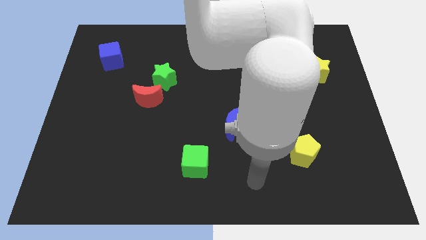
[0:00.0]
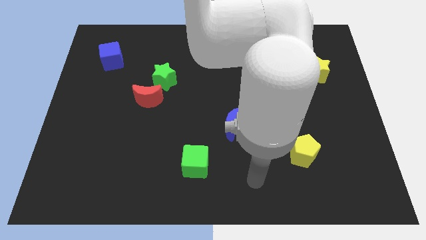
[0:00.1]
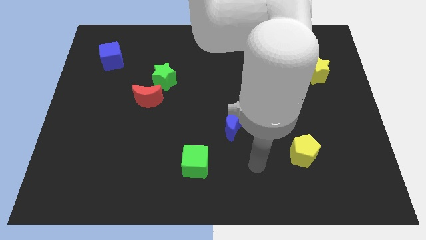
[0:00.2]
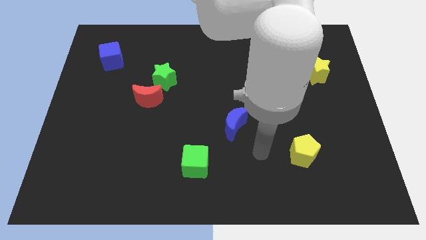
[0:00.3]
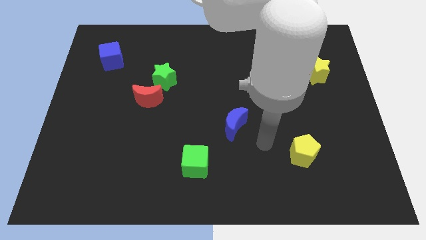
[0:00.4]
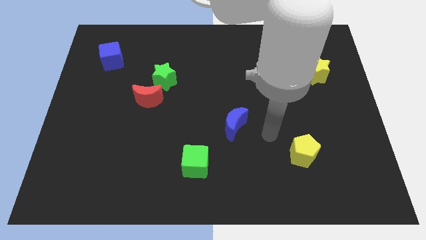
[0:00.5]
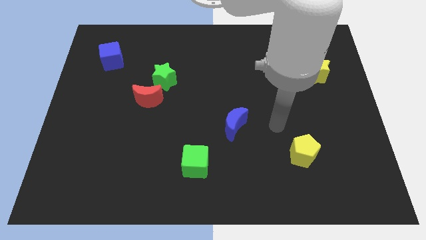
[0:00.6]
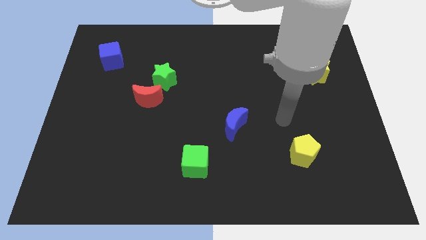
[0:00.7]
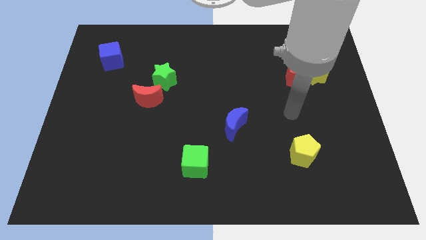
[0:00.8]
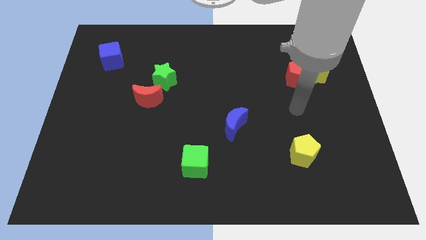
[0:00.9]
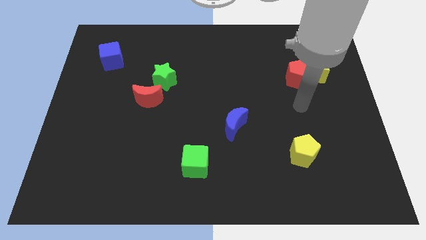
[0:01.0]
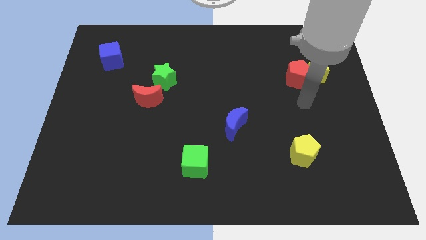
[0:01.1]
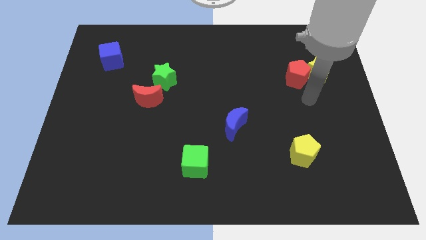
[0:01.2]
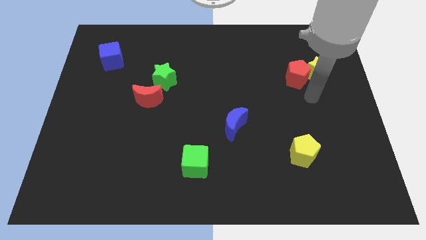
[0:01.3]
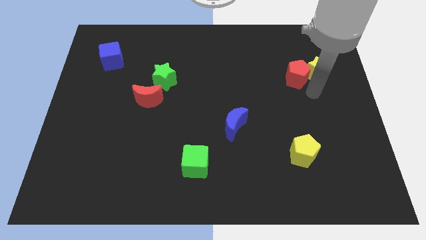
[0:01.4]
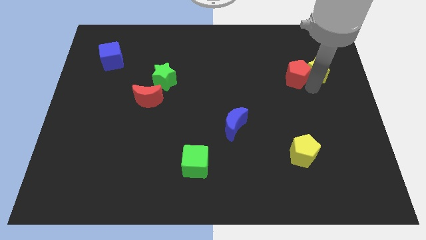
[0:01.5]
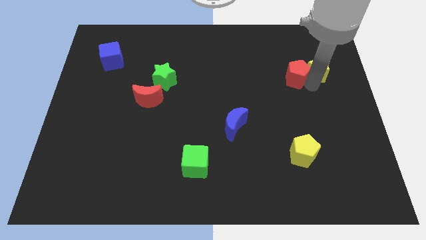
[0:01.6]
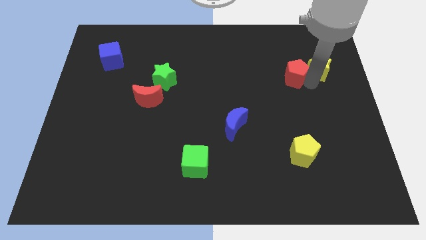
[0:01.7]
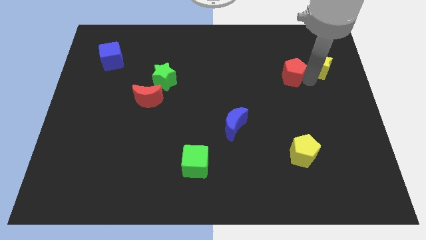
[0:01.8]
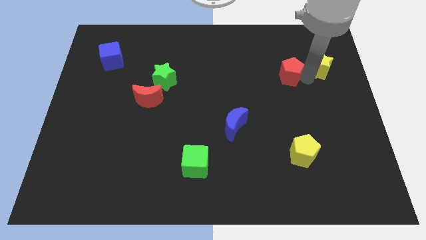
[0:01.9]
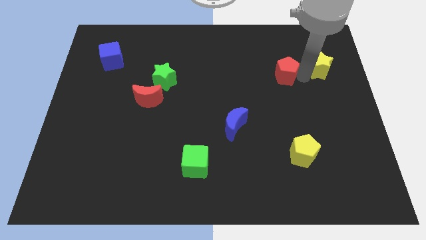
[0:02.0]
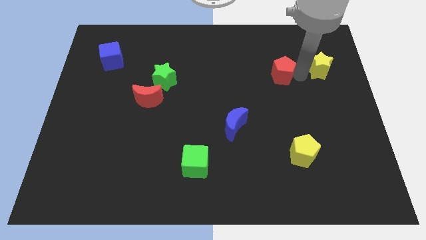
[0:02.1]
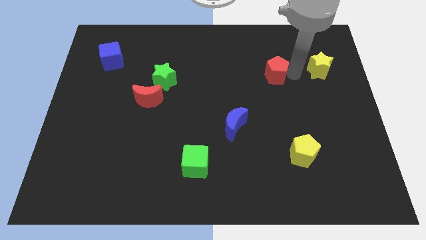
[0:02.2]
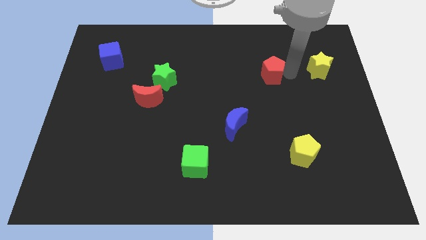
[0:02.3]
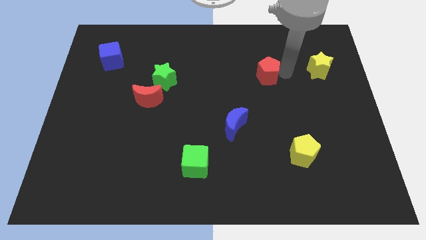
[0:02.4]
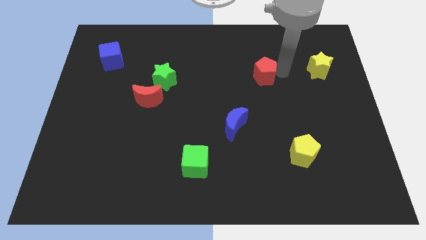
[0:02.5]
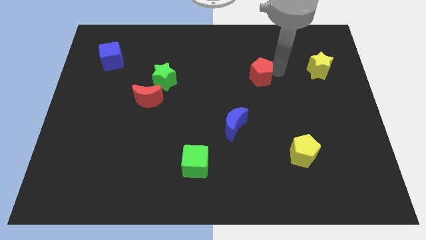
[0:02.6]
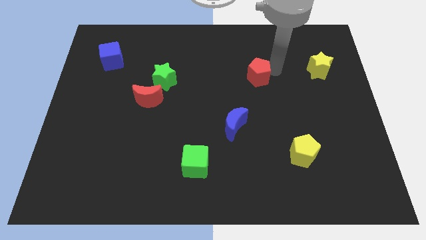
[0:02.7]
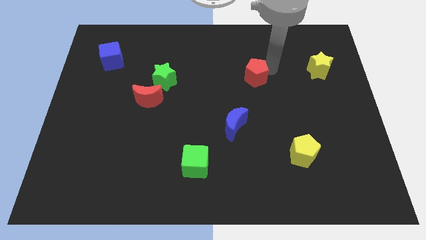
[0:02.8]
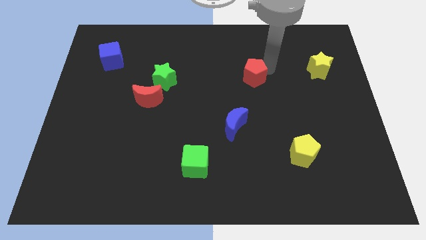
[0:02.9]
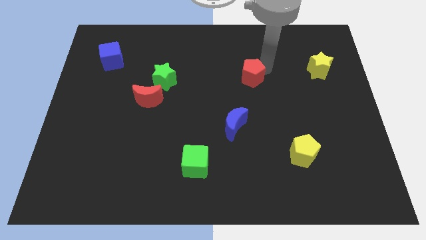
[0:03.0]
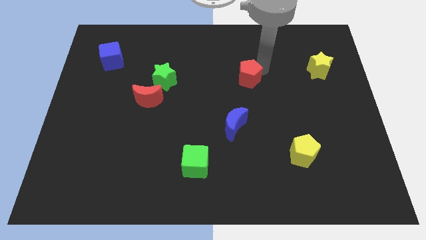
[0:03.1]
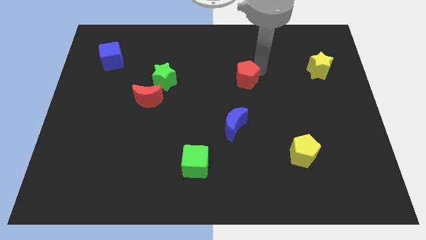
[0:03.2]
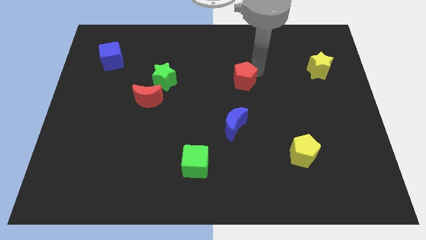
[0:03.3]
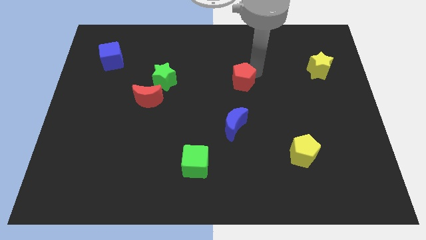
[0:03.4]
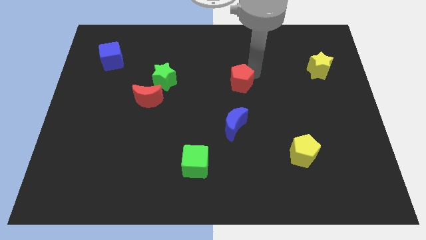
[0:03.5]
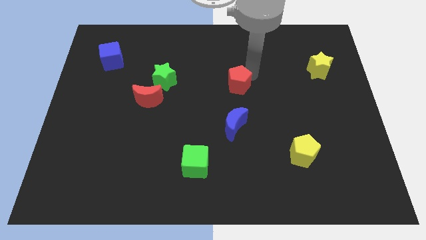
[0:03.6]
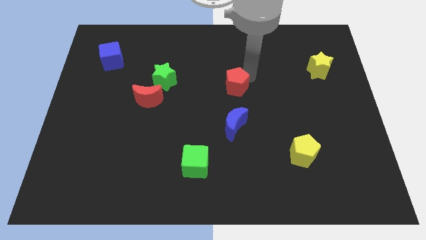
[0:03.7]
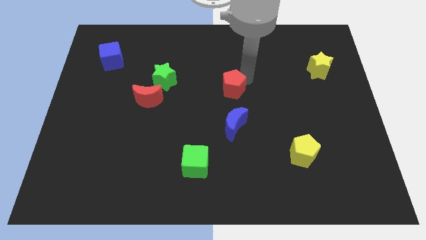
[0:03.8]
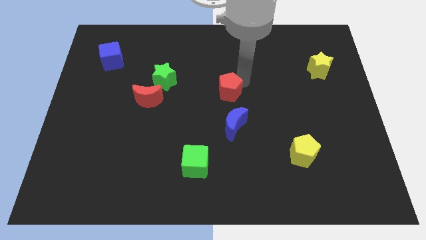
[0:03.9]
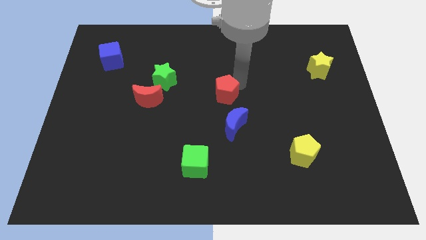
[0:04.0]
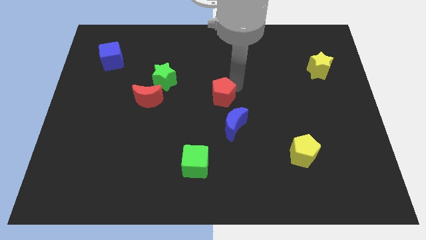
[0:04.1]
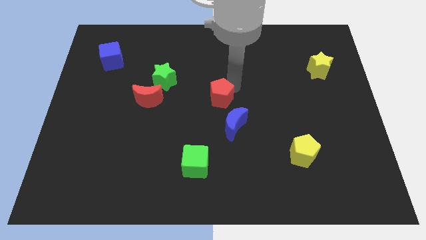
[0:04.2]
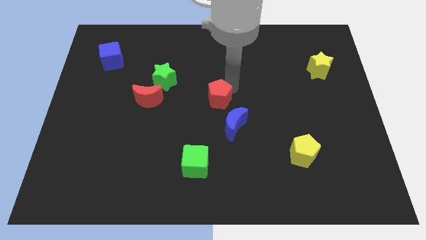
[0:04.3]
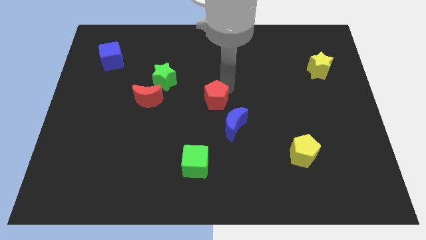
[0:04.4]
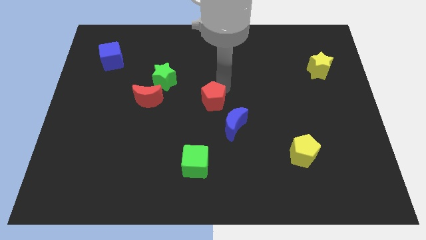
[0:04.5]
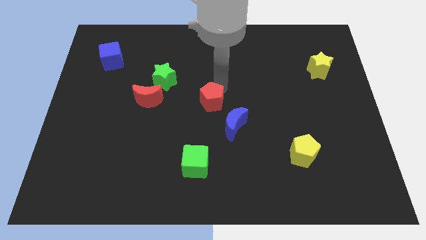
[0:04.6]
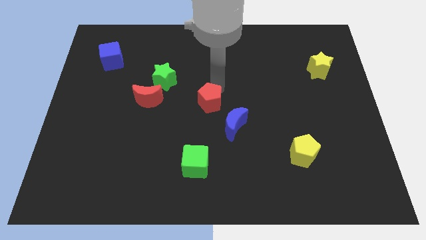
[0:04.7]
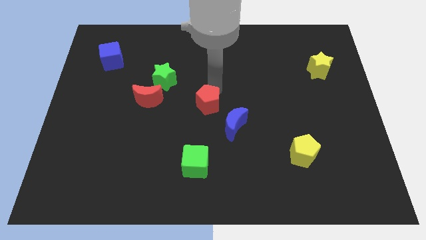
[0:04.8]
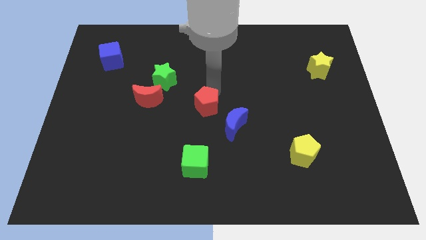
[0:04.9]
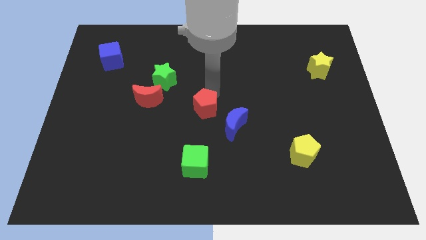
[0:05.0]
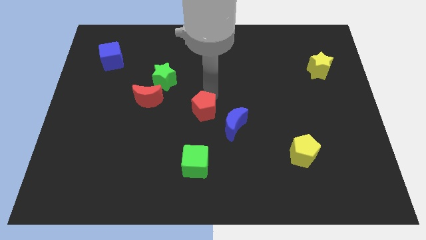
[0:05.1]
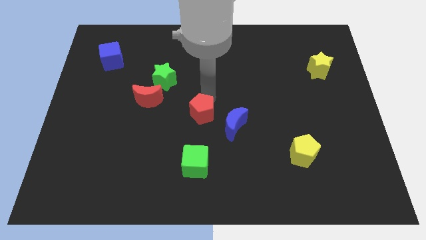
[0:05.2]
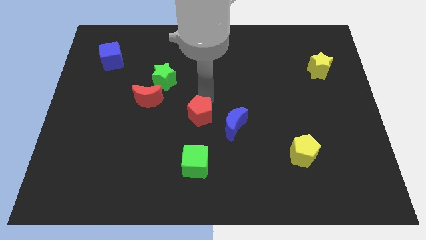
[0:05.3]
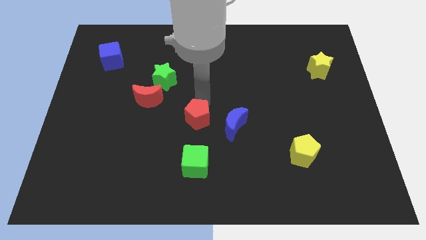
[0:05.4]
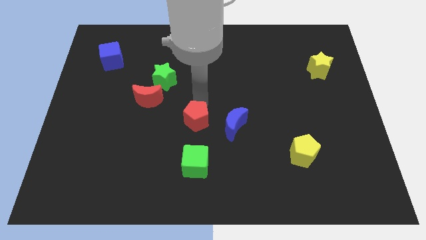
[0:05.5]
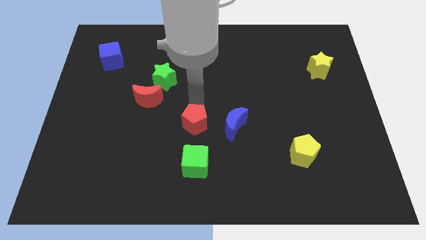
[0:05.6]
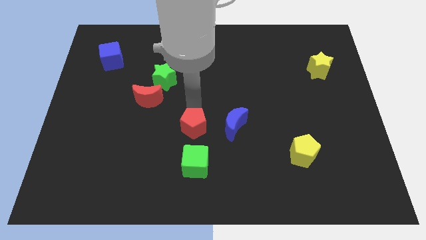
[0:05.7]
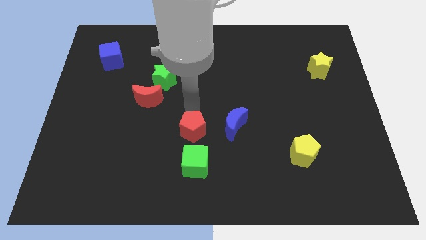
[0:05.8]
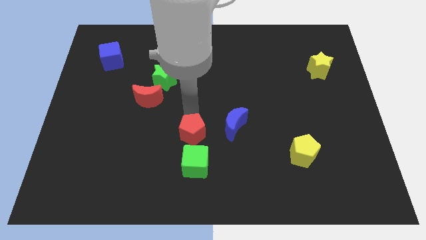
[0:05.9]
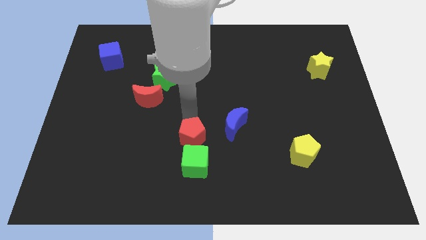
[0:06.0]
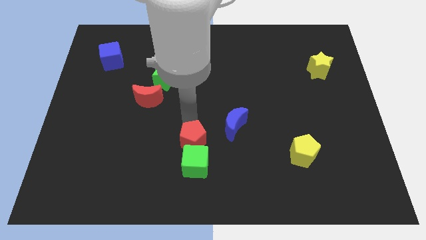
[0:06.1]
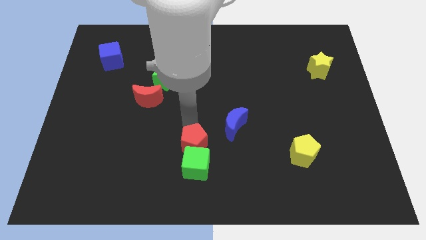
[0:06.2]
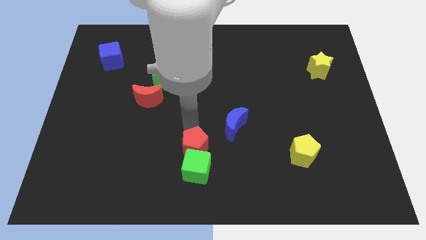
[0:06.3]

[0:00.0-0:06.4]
push the red pentagon towards the green cube

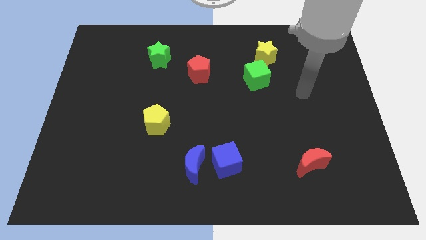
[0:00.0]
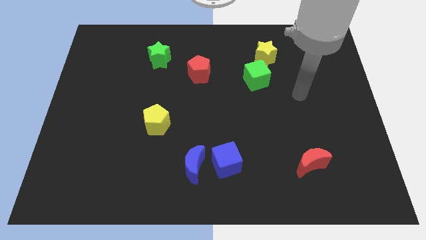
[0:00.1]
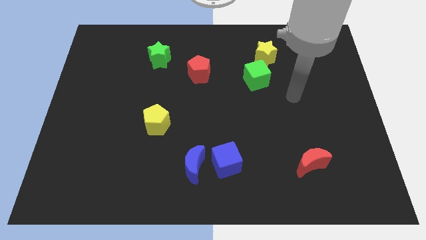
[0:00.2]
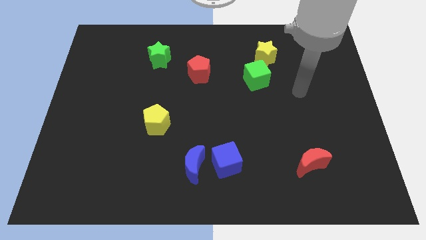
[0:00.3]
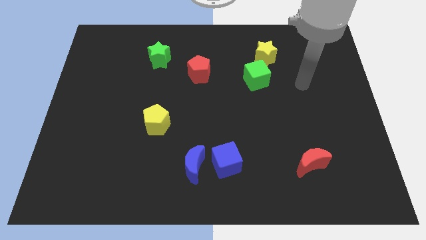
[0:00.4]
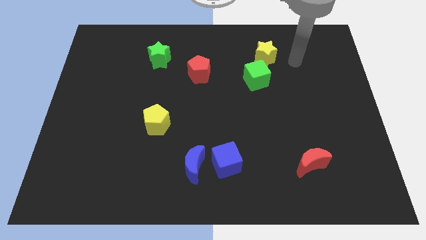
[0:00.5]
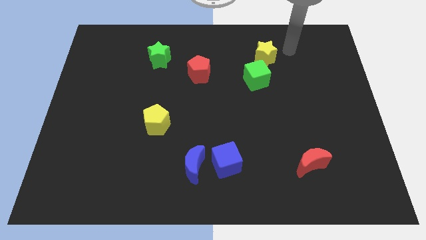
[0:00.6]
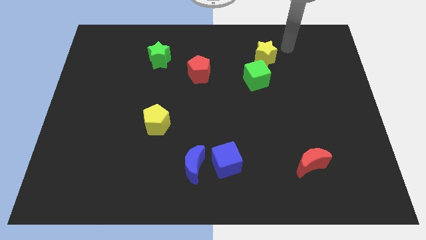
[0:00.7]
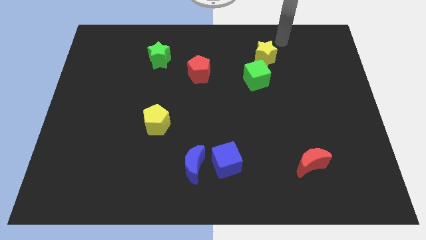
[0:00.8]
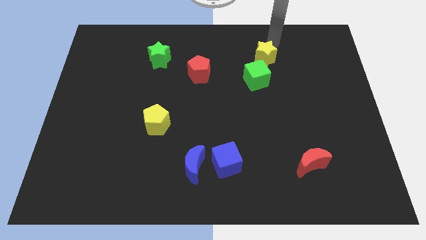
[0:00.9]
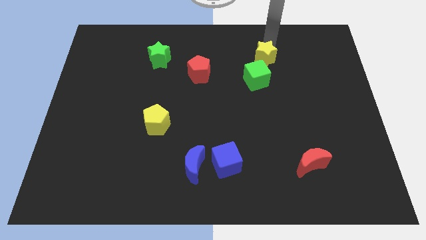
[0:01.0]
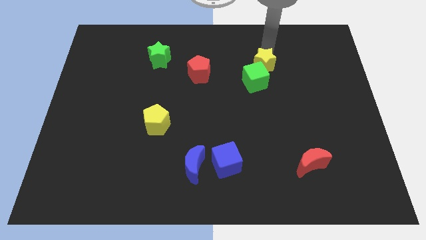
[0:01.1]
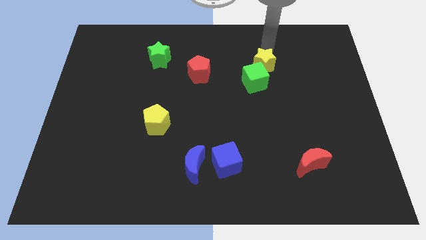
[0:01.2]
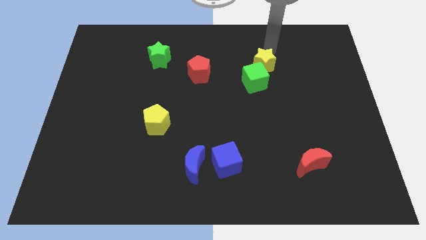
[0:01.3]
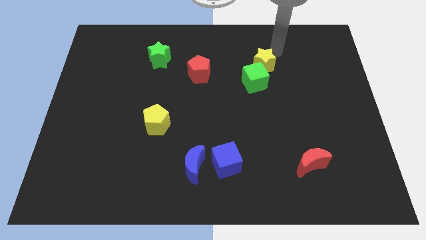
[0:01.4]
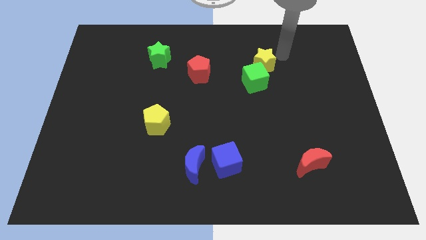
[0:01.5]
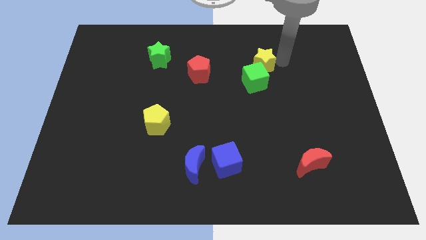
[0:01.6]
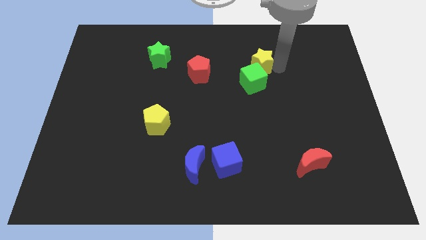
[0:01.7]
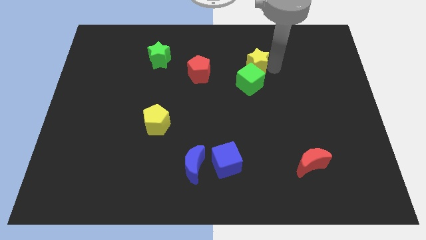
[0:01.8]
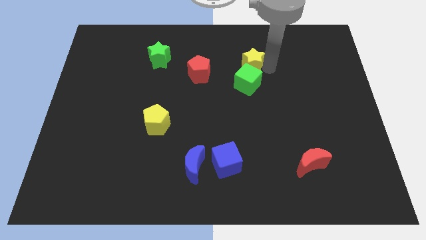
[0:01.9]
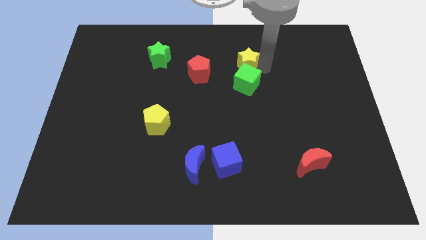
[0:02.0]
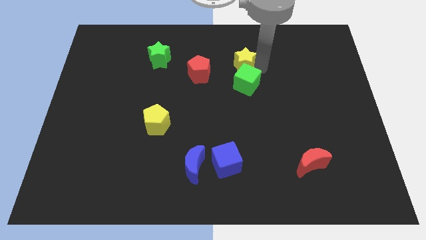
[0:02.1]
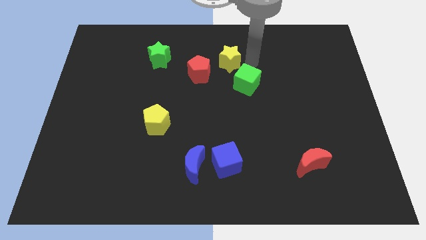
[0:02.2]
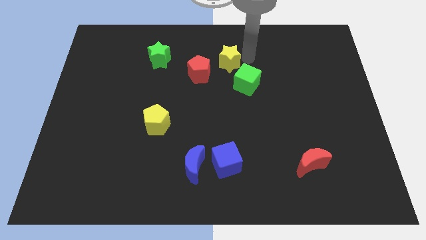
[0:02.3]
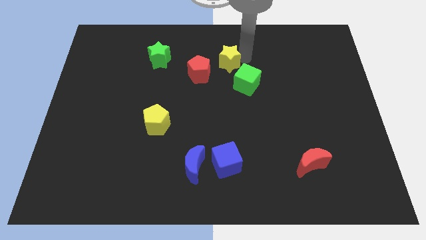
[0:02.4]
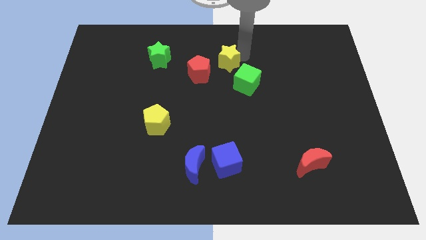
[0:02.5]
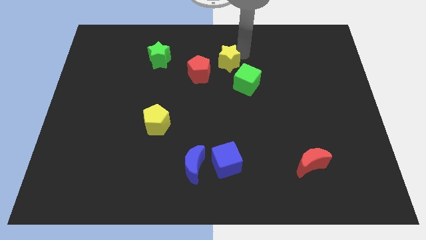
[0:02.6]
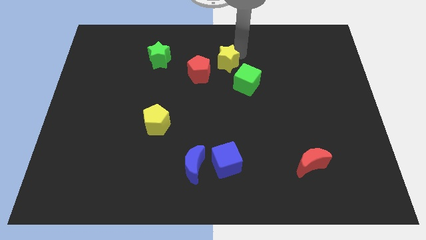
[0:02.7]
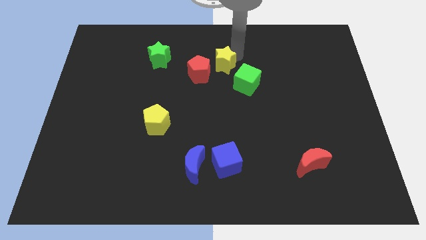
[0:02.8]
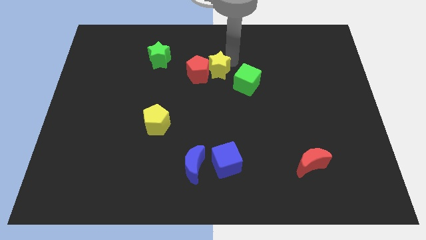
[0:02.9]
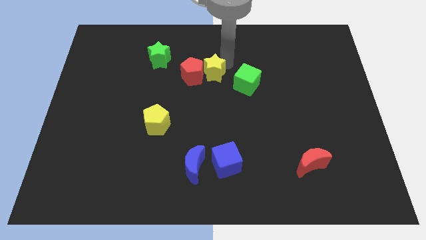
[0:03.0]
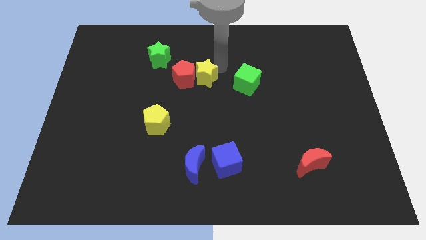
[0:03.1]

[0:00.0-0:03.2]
slide the yellow star towards the red pentagon
